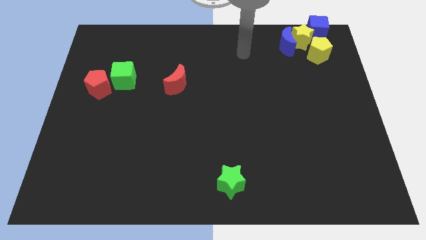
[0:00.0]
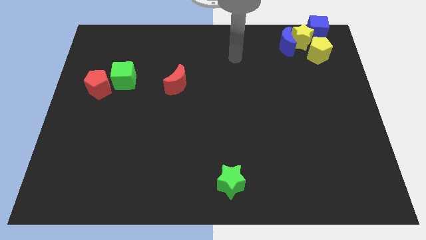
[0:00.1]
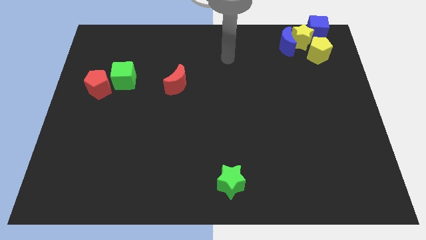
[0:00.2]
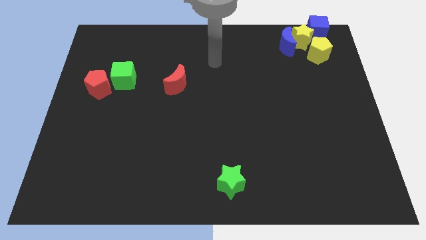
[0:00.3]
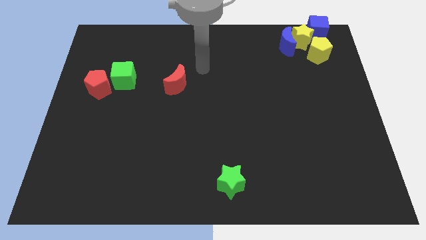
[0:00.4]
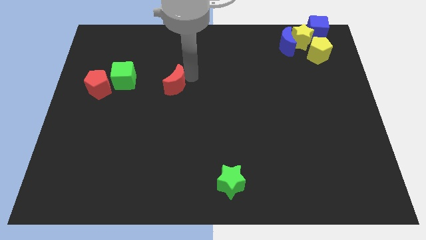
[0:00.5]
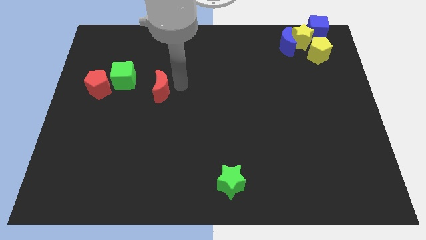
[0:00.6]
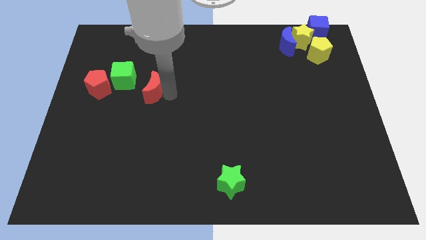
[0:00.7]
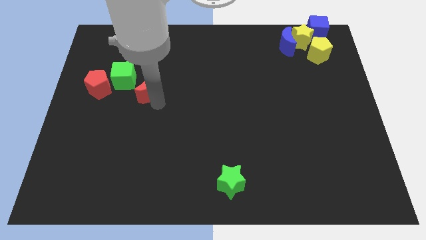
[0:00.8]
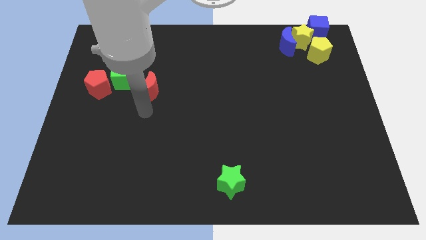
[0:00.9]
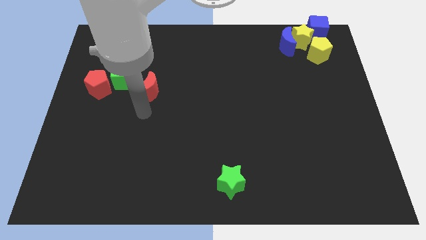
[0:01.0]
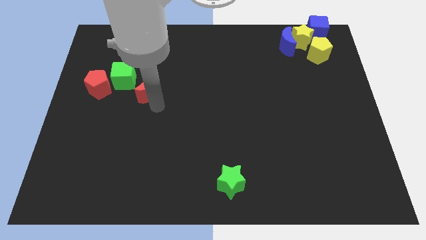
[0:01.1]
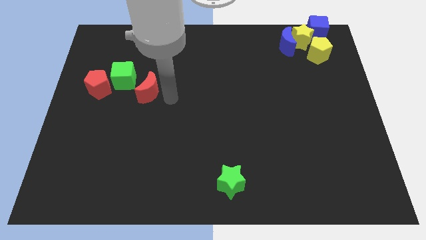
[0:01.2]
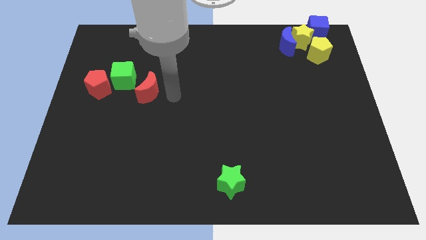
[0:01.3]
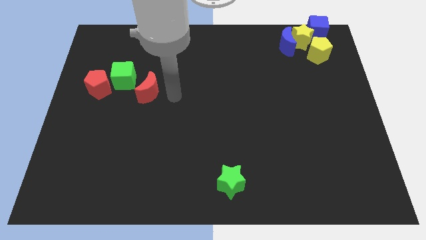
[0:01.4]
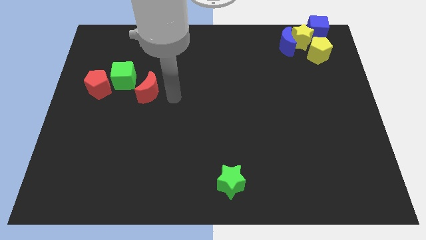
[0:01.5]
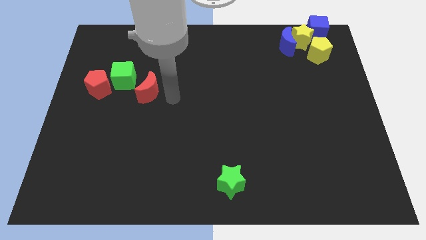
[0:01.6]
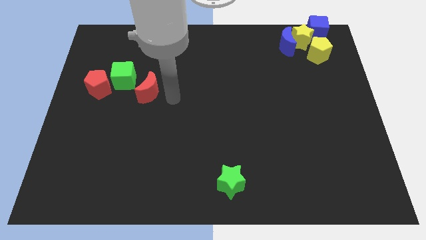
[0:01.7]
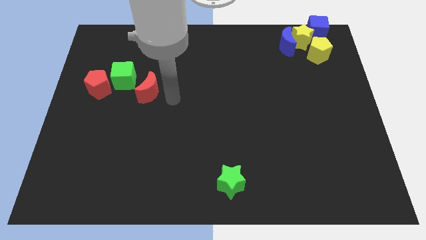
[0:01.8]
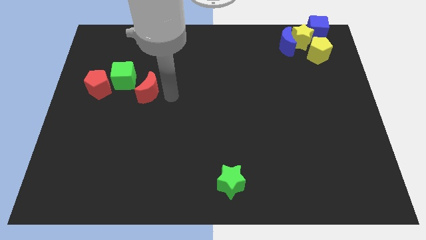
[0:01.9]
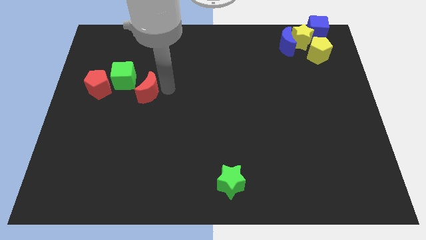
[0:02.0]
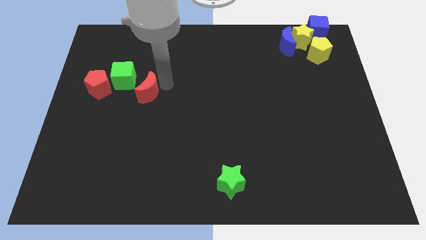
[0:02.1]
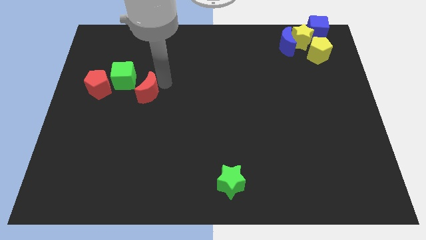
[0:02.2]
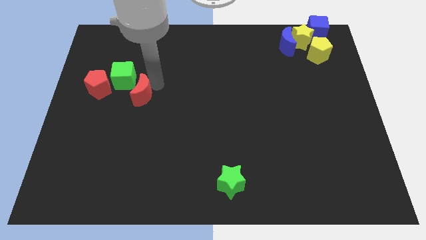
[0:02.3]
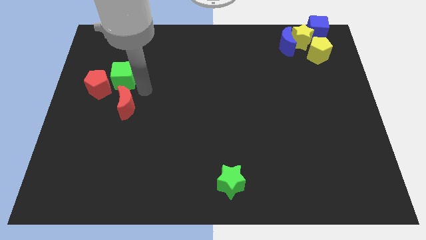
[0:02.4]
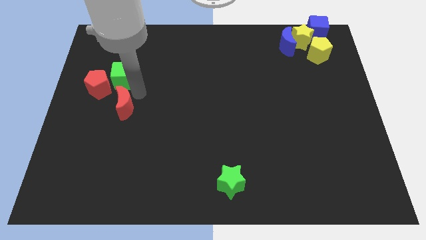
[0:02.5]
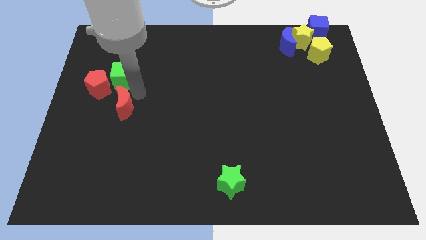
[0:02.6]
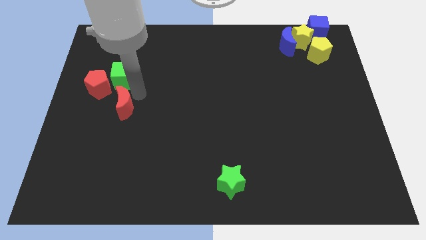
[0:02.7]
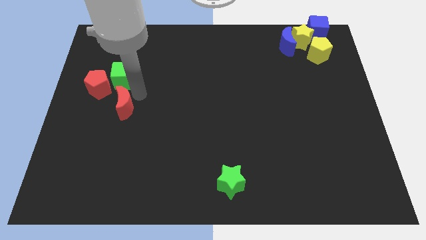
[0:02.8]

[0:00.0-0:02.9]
push red crescent below green cube

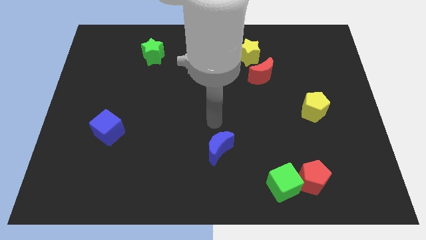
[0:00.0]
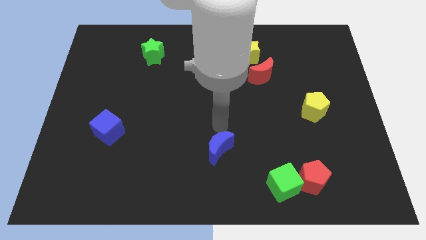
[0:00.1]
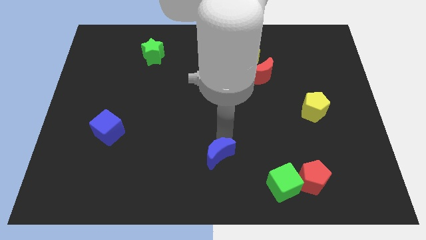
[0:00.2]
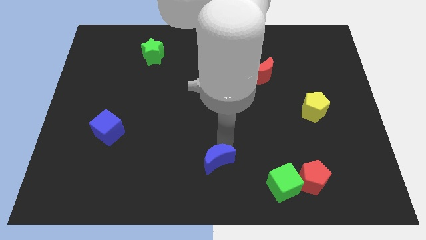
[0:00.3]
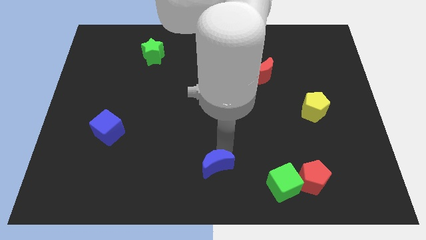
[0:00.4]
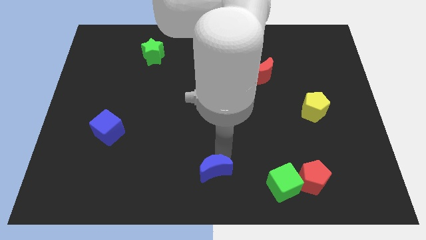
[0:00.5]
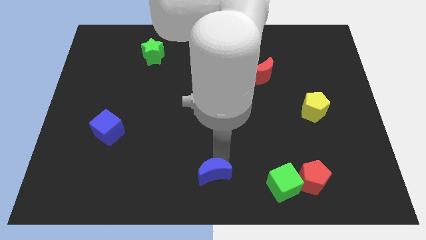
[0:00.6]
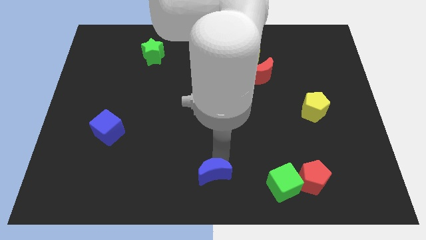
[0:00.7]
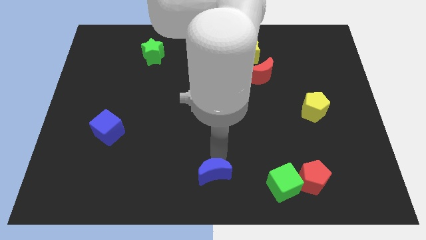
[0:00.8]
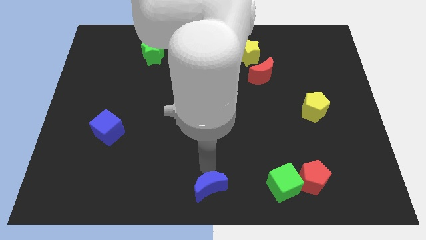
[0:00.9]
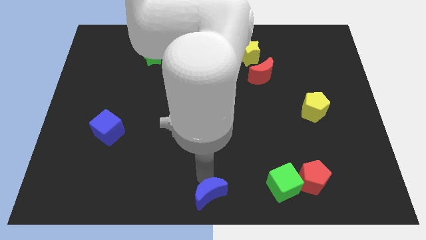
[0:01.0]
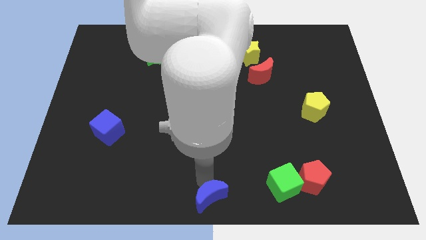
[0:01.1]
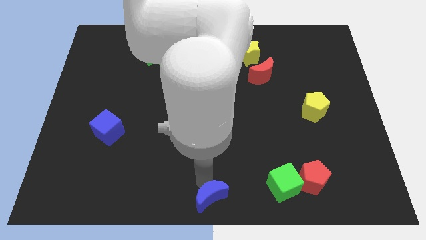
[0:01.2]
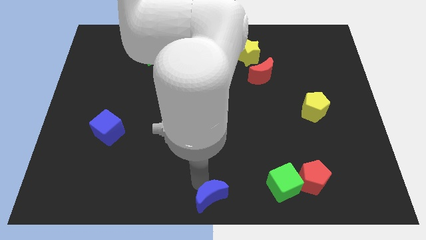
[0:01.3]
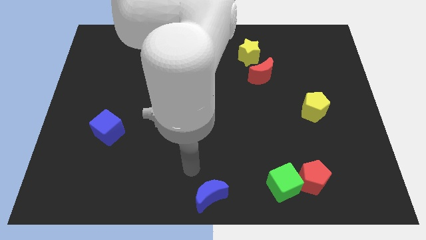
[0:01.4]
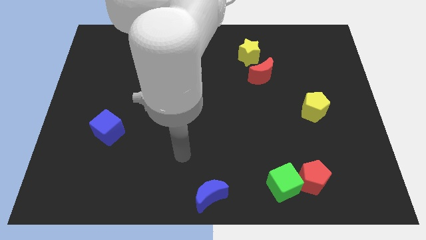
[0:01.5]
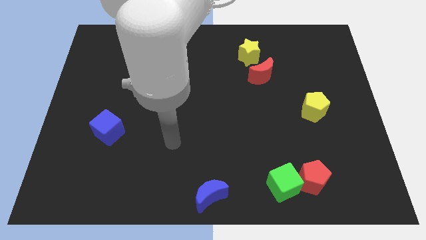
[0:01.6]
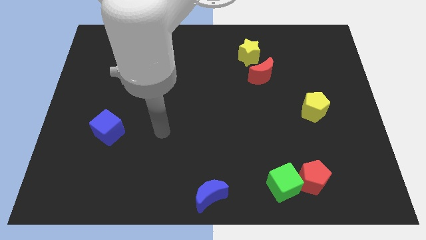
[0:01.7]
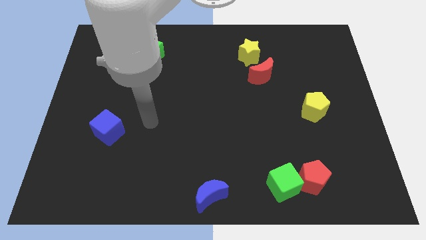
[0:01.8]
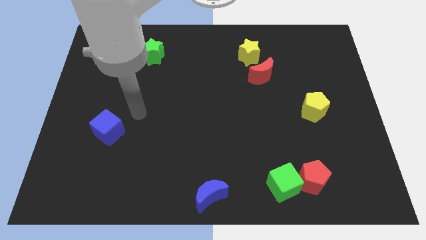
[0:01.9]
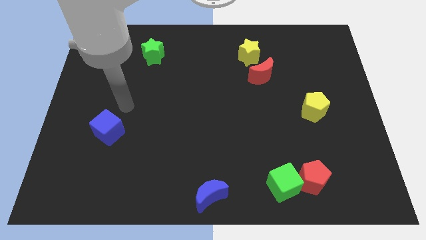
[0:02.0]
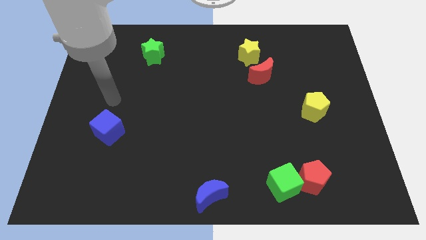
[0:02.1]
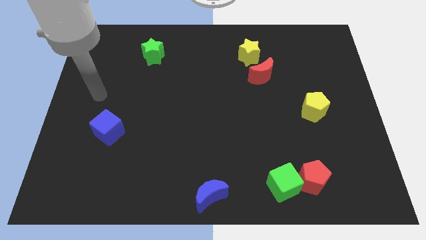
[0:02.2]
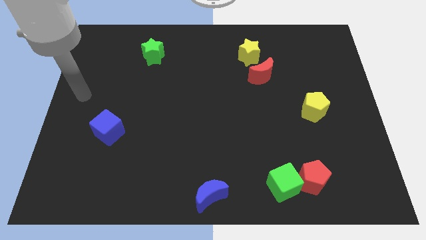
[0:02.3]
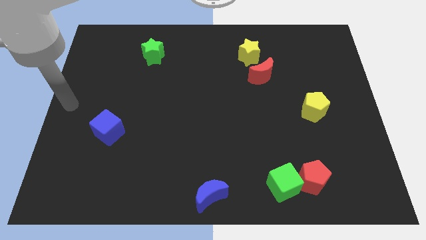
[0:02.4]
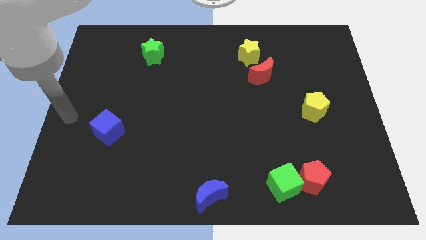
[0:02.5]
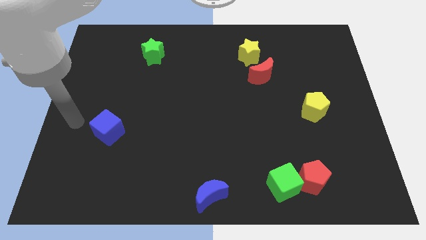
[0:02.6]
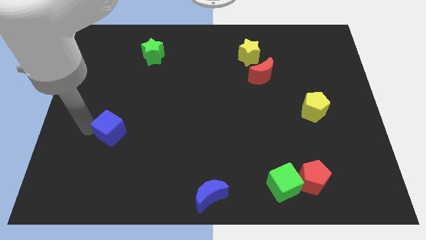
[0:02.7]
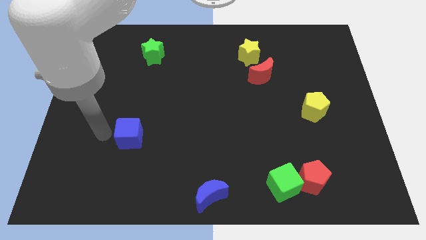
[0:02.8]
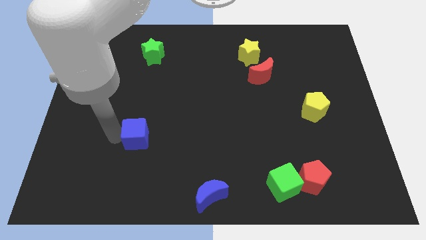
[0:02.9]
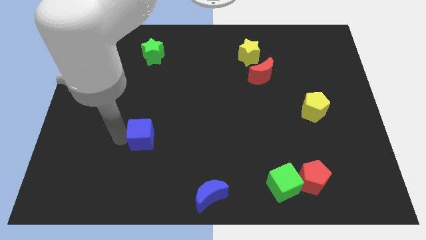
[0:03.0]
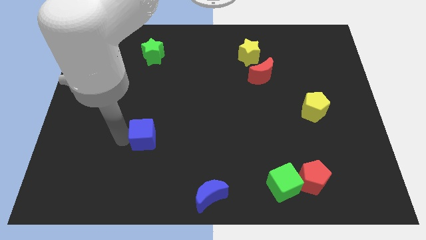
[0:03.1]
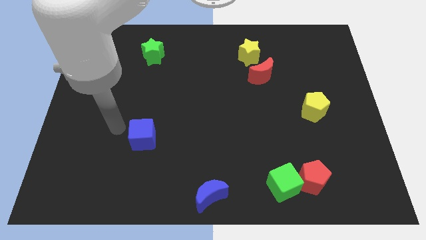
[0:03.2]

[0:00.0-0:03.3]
move your arm to the left side of the blue cube

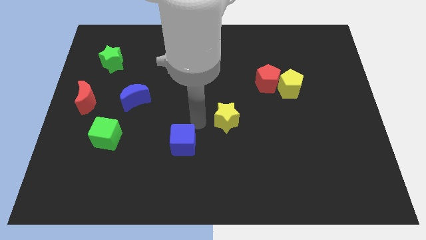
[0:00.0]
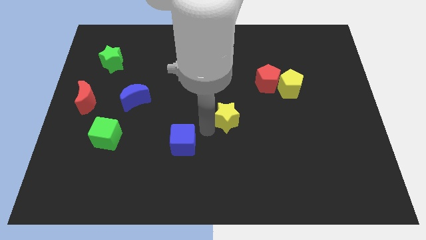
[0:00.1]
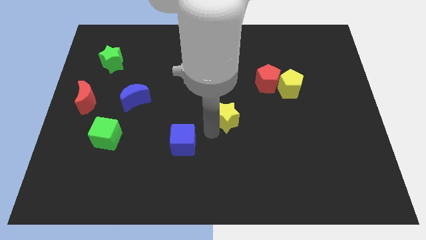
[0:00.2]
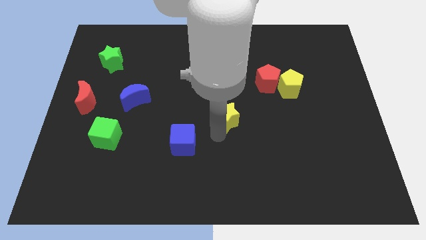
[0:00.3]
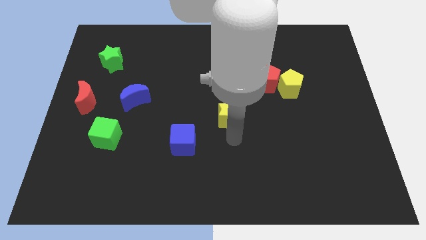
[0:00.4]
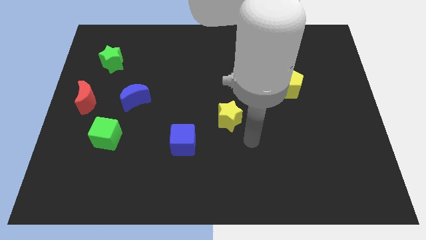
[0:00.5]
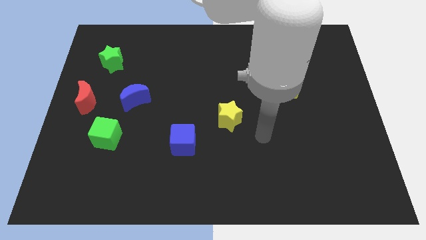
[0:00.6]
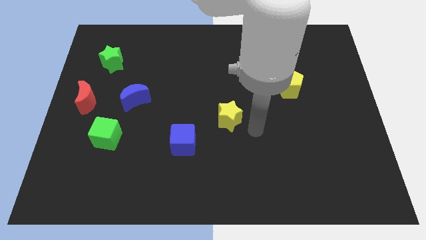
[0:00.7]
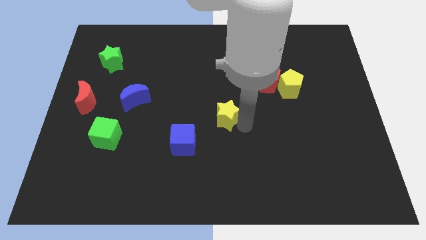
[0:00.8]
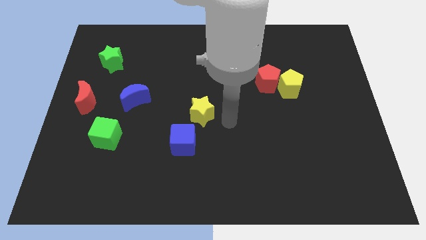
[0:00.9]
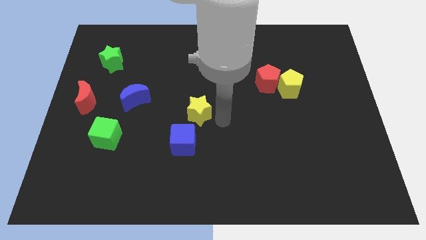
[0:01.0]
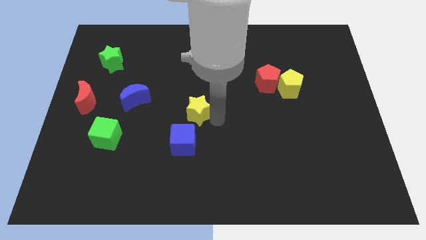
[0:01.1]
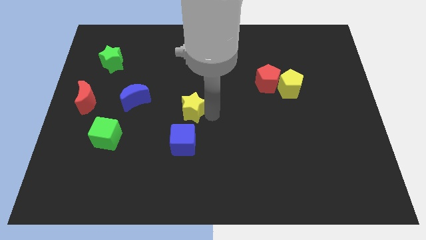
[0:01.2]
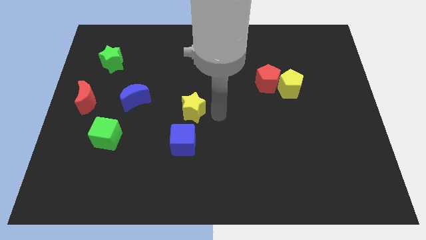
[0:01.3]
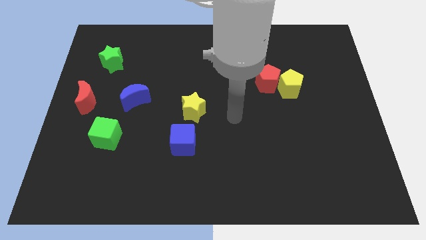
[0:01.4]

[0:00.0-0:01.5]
slide the yellow star to the top right side of the blue cube

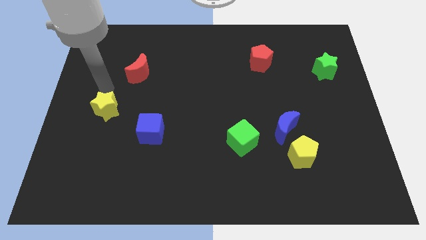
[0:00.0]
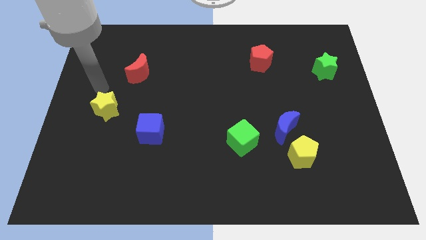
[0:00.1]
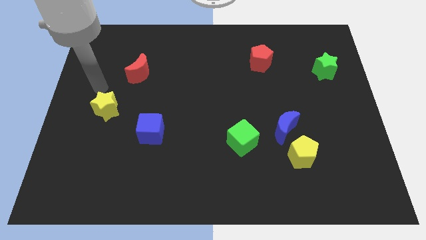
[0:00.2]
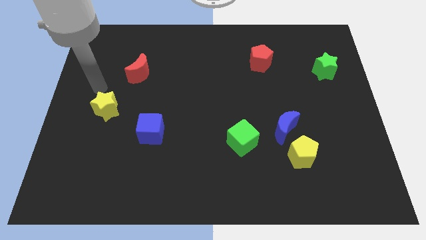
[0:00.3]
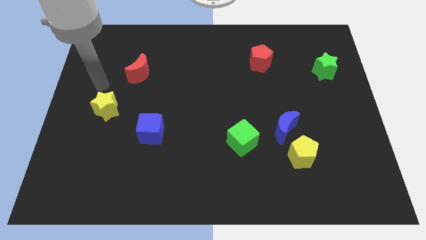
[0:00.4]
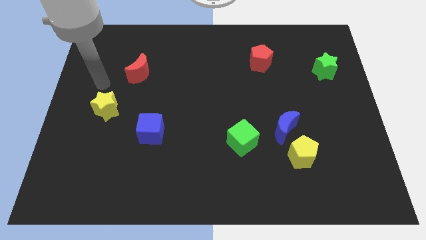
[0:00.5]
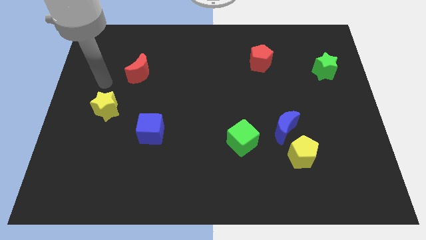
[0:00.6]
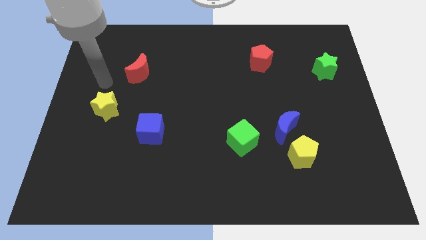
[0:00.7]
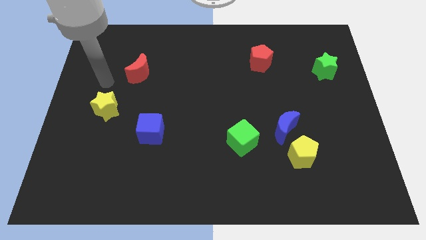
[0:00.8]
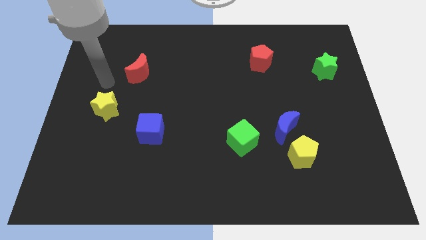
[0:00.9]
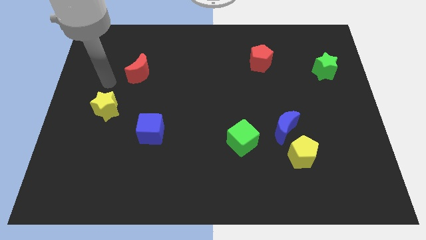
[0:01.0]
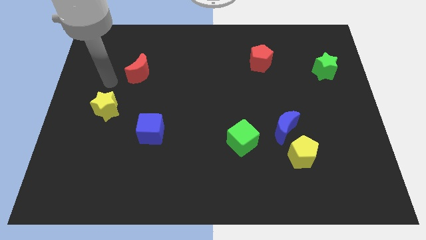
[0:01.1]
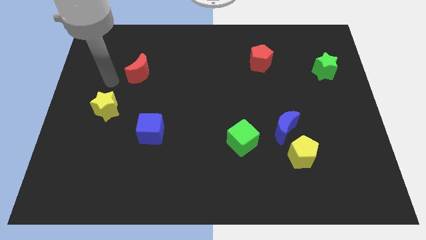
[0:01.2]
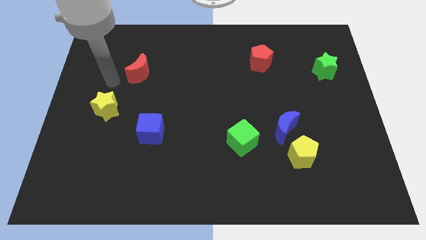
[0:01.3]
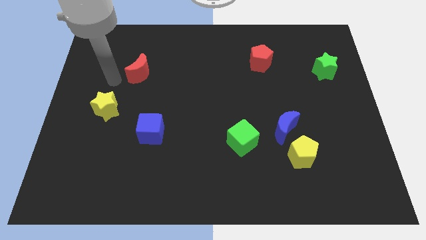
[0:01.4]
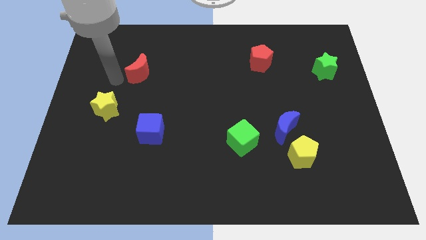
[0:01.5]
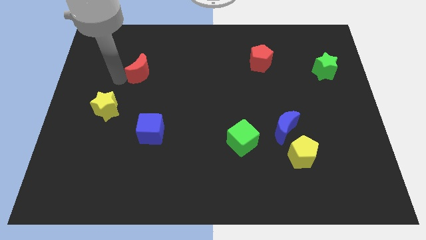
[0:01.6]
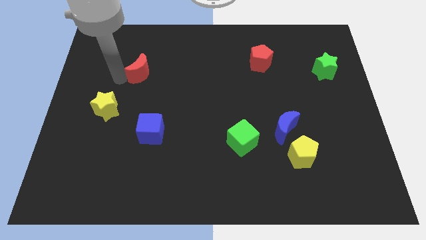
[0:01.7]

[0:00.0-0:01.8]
push the arm towards red crescent
